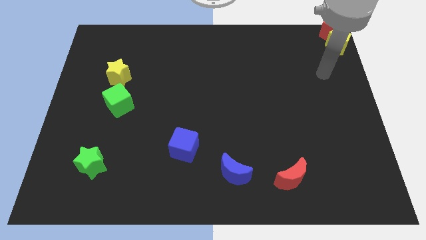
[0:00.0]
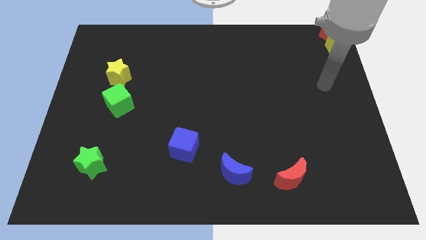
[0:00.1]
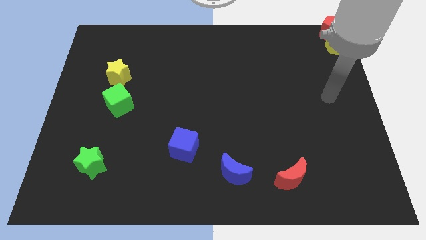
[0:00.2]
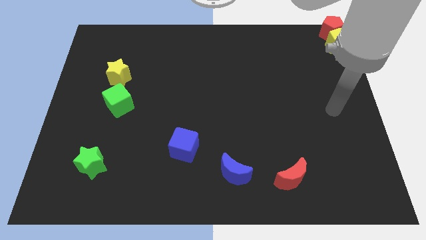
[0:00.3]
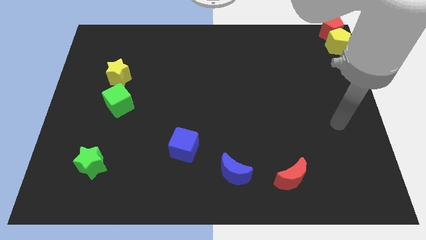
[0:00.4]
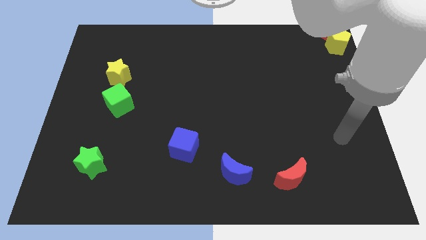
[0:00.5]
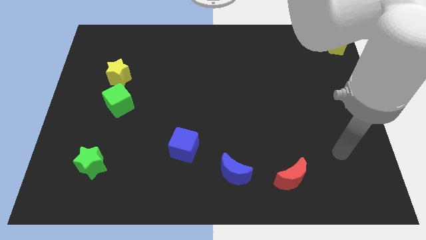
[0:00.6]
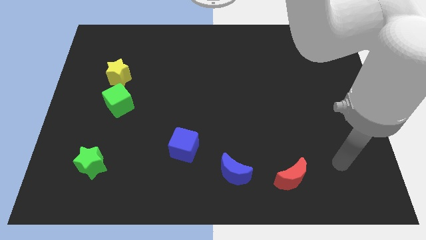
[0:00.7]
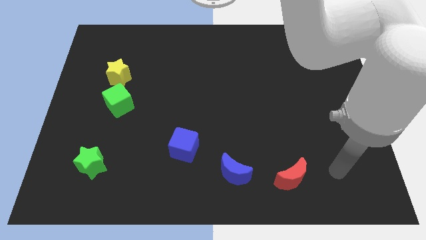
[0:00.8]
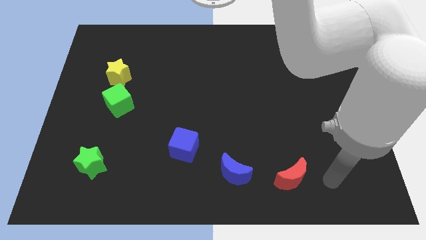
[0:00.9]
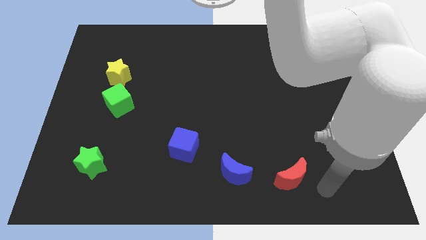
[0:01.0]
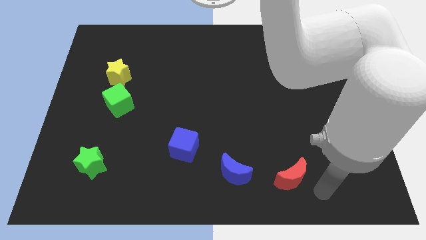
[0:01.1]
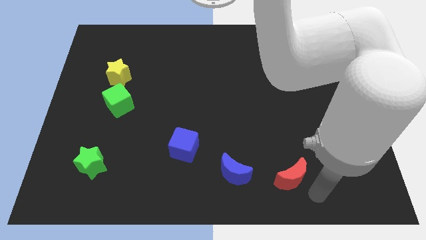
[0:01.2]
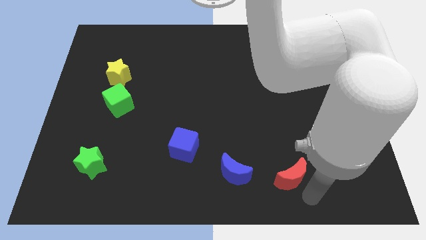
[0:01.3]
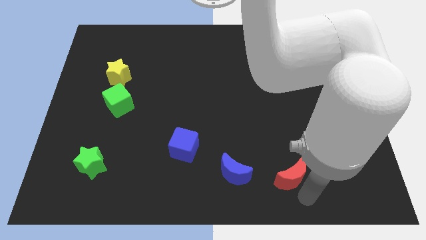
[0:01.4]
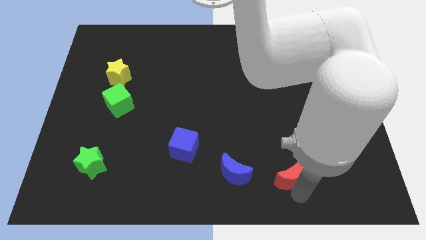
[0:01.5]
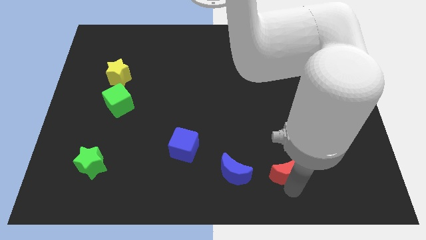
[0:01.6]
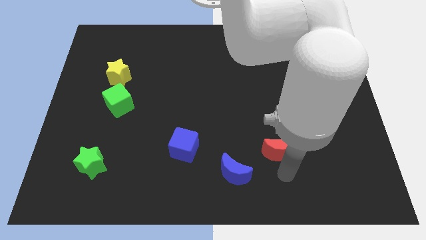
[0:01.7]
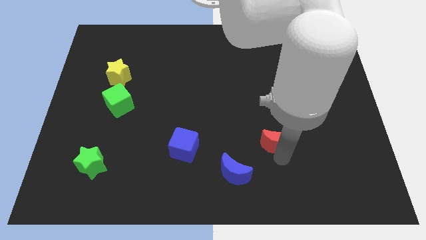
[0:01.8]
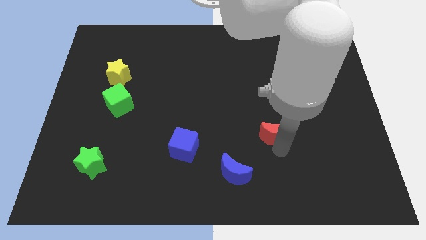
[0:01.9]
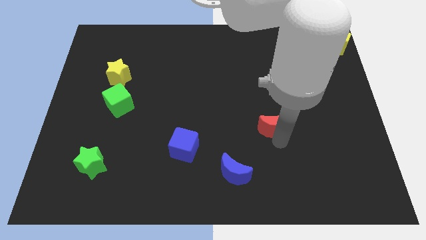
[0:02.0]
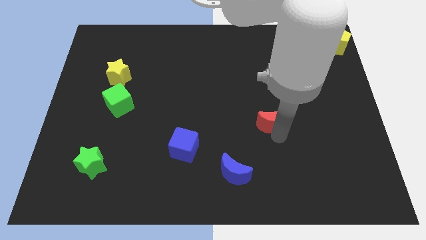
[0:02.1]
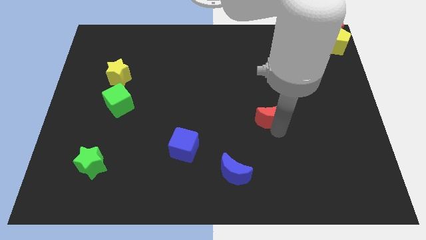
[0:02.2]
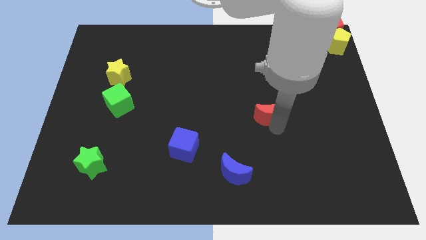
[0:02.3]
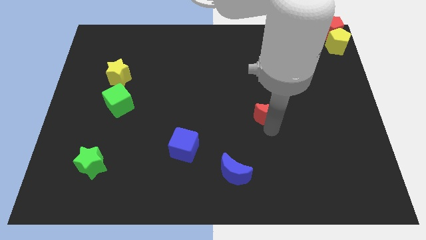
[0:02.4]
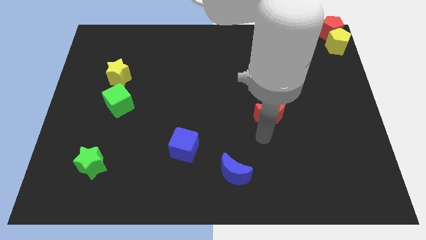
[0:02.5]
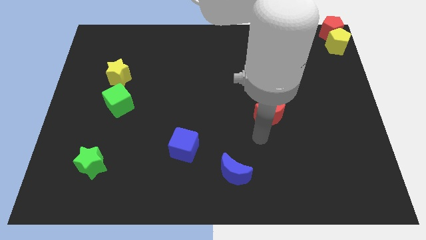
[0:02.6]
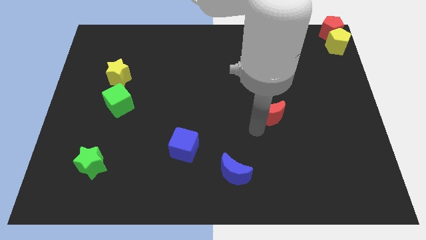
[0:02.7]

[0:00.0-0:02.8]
move the red moon diagonal above the blue moon

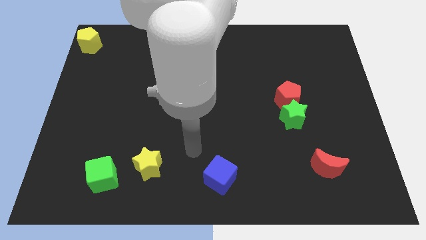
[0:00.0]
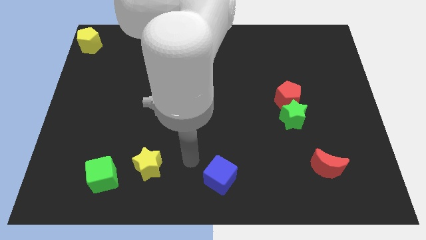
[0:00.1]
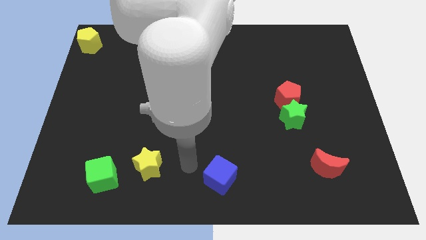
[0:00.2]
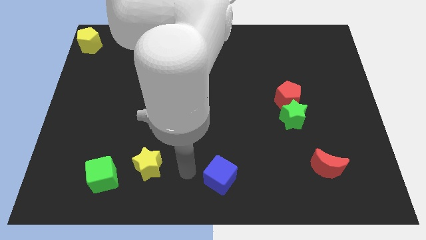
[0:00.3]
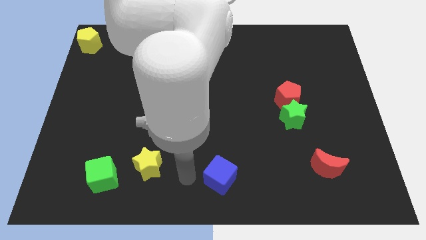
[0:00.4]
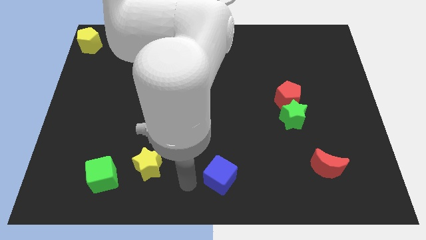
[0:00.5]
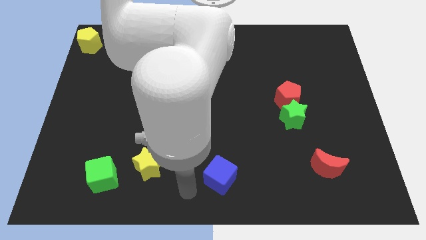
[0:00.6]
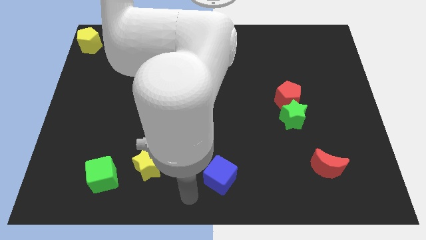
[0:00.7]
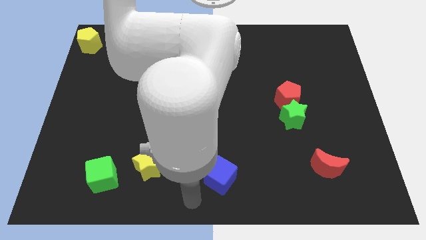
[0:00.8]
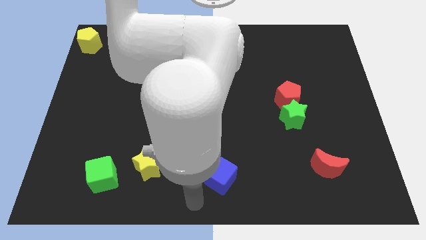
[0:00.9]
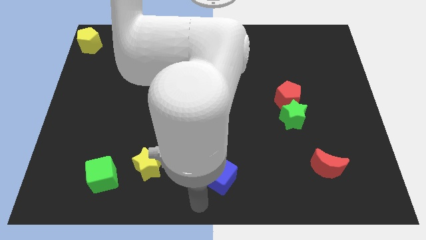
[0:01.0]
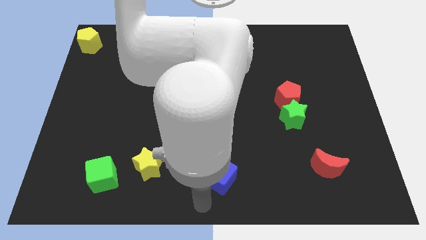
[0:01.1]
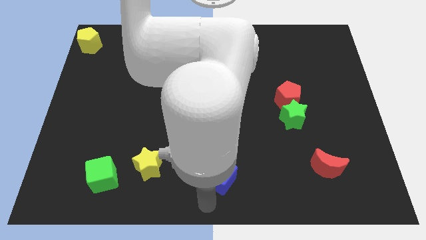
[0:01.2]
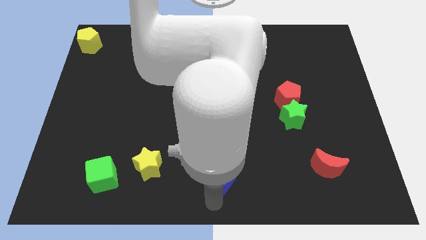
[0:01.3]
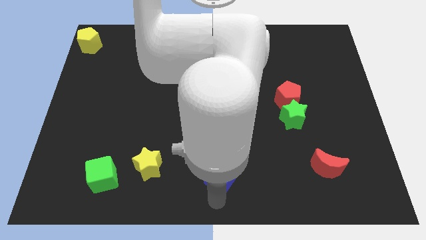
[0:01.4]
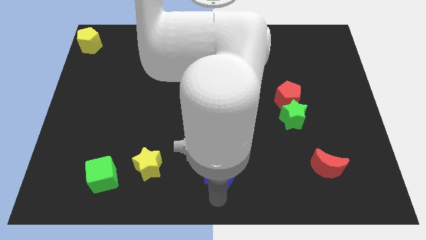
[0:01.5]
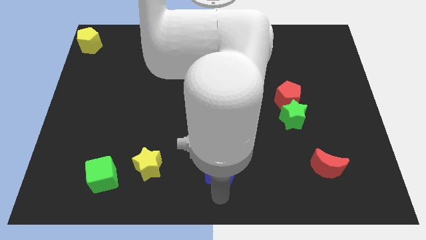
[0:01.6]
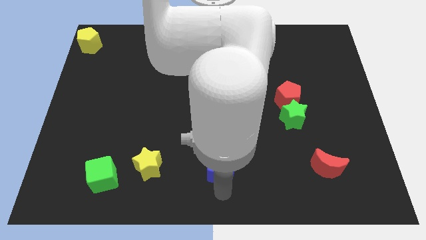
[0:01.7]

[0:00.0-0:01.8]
point your arm below blue cube

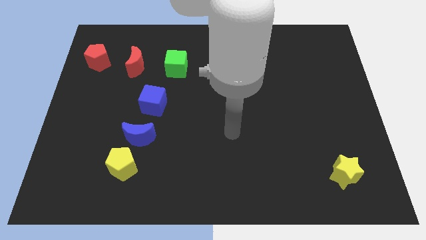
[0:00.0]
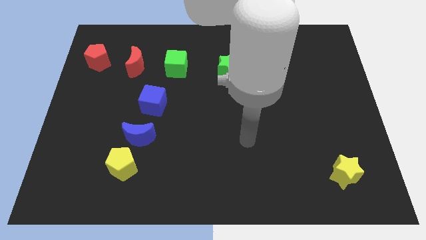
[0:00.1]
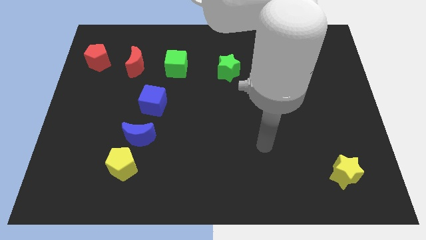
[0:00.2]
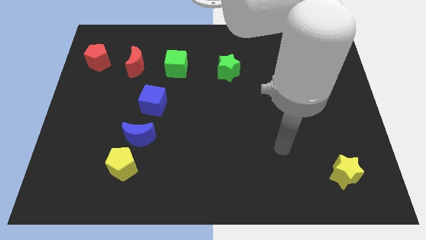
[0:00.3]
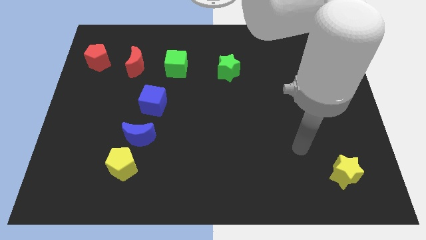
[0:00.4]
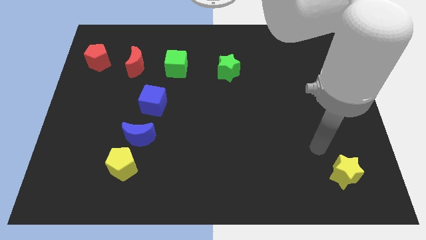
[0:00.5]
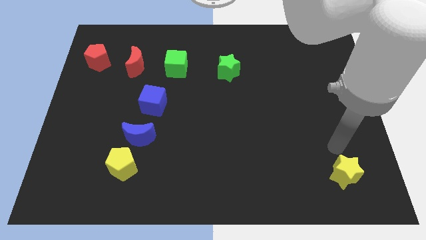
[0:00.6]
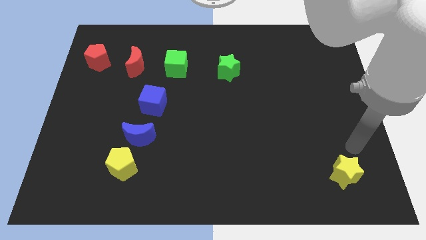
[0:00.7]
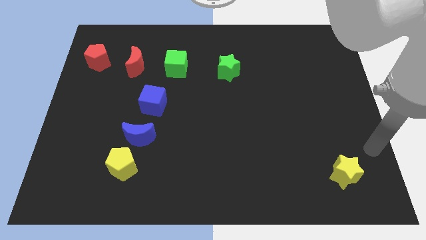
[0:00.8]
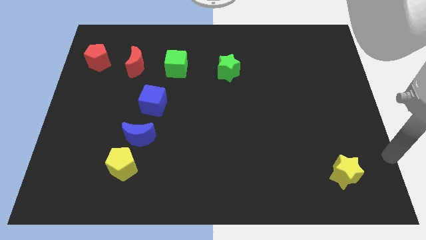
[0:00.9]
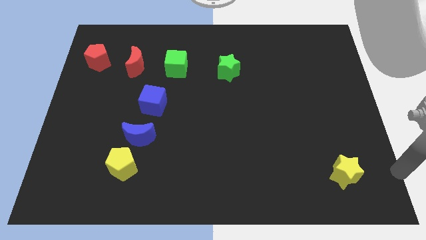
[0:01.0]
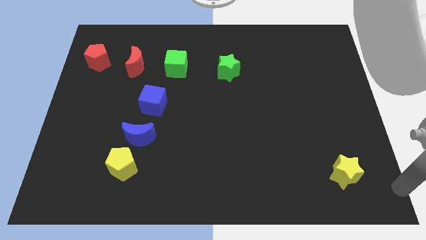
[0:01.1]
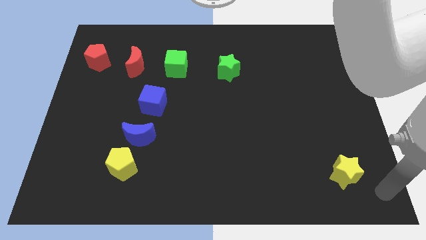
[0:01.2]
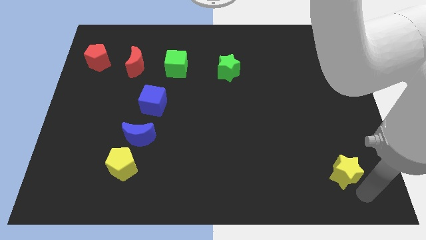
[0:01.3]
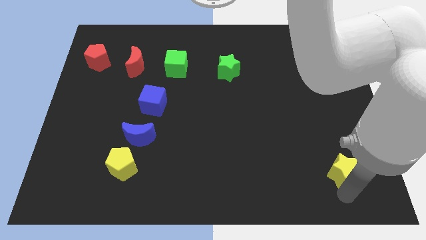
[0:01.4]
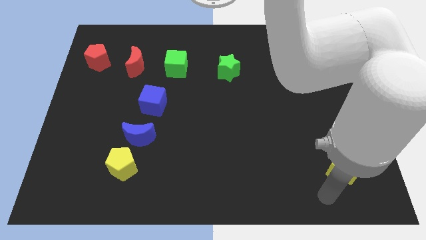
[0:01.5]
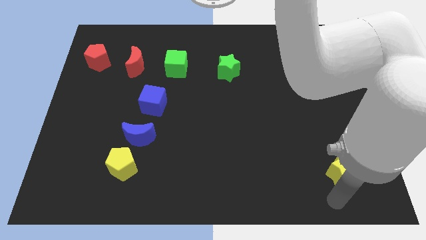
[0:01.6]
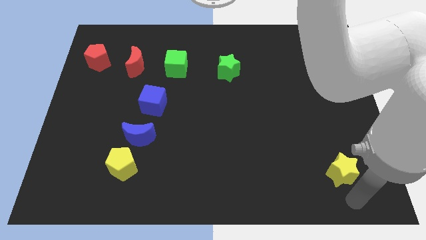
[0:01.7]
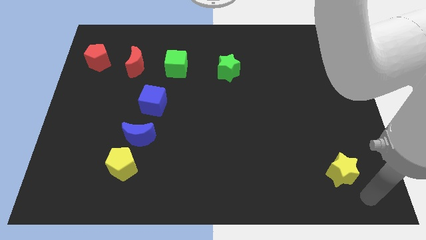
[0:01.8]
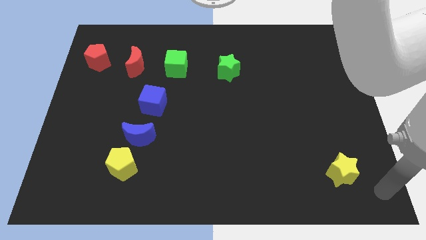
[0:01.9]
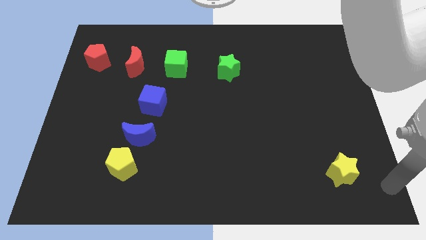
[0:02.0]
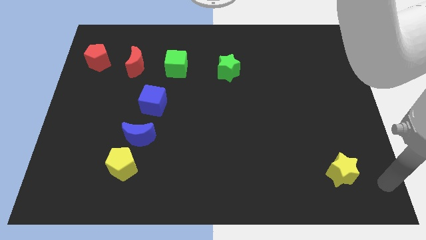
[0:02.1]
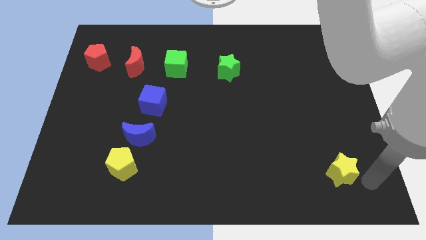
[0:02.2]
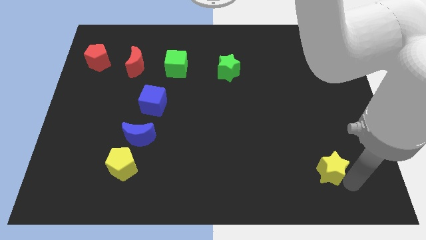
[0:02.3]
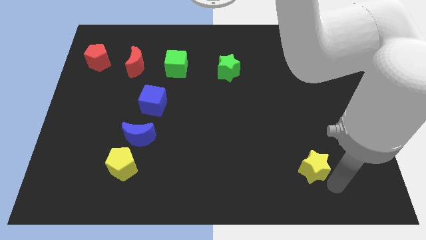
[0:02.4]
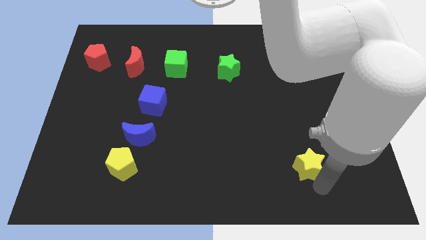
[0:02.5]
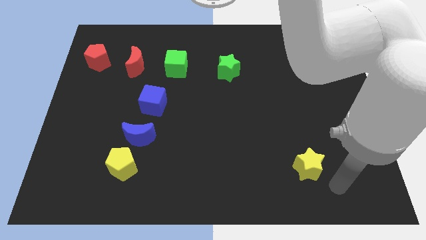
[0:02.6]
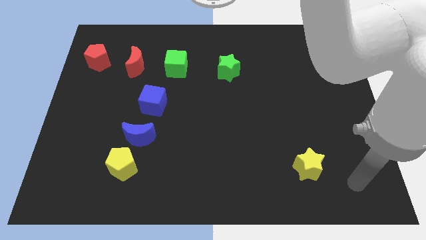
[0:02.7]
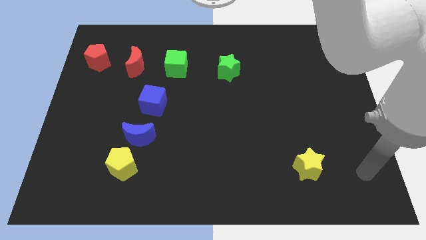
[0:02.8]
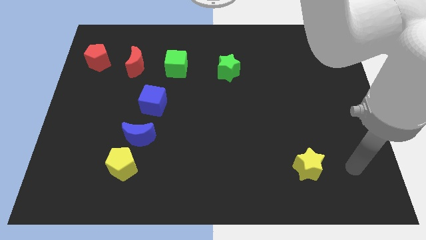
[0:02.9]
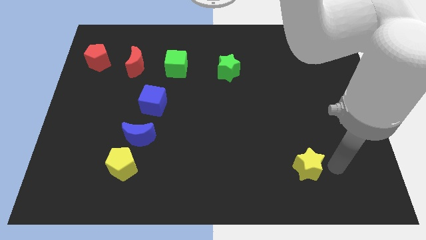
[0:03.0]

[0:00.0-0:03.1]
drag yellow star towards left side of the board

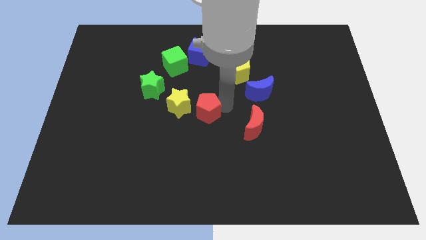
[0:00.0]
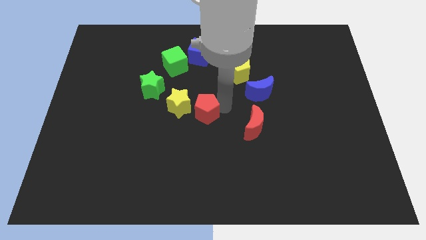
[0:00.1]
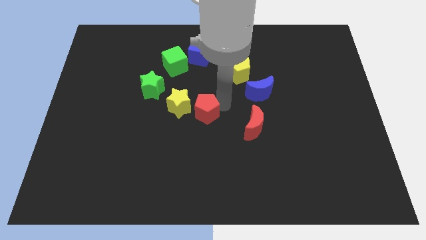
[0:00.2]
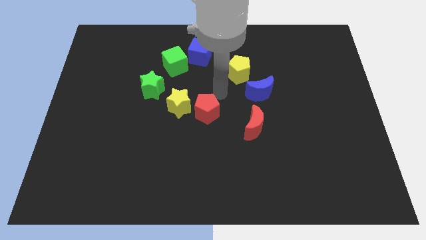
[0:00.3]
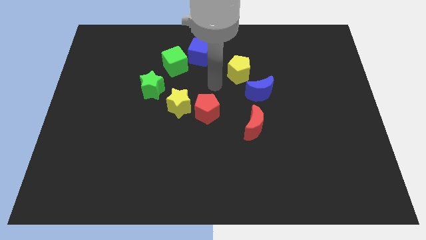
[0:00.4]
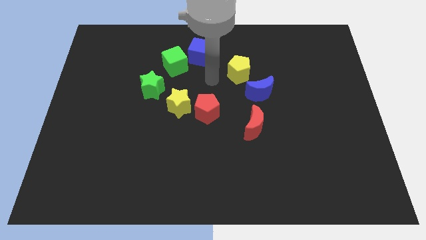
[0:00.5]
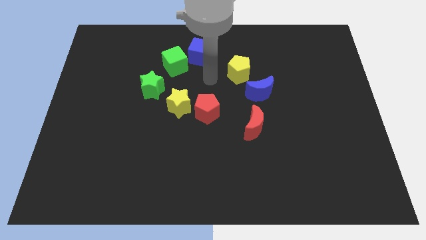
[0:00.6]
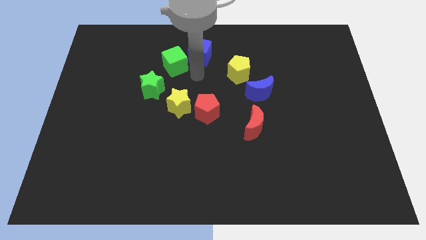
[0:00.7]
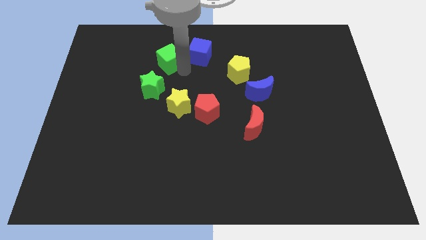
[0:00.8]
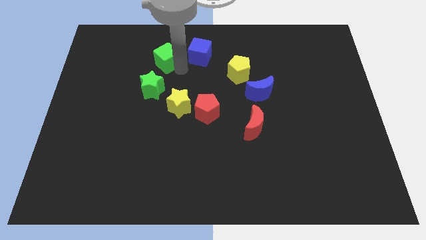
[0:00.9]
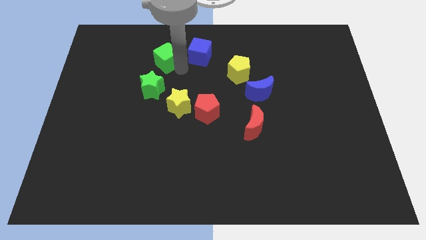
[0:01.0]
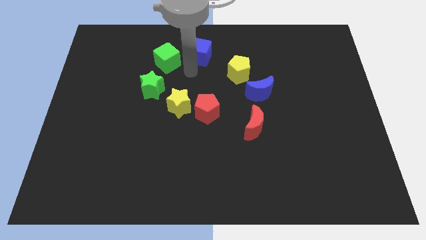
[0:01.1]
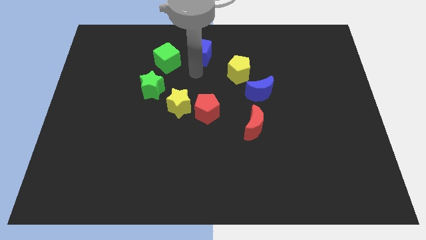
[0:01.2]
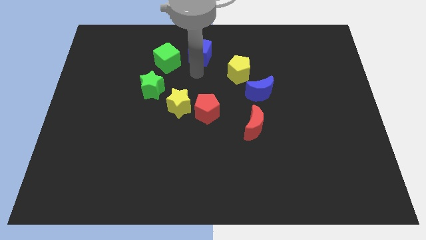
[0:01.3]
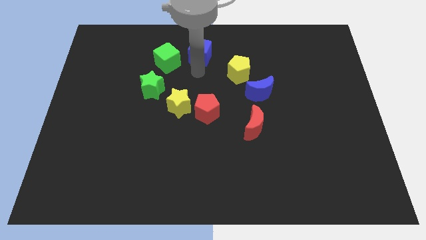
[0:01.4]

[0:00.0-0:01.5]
slightly move the green cube diagonally up
